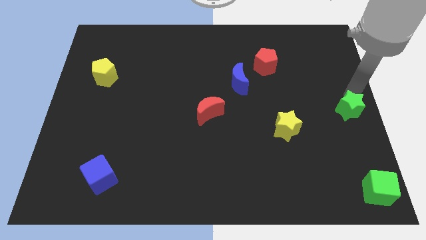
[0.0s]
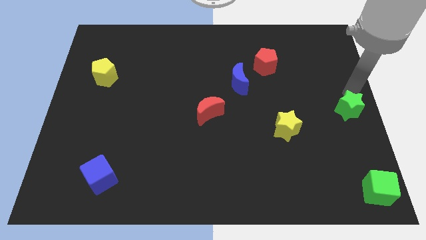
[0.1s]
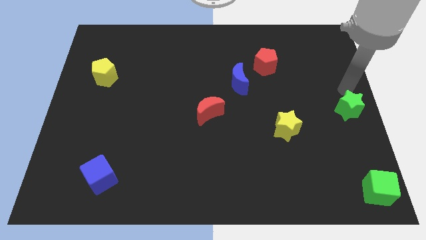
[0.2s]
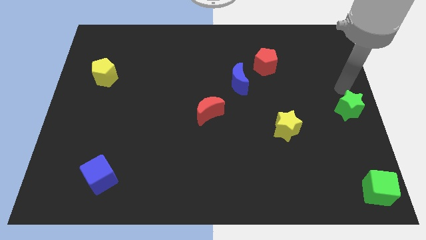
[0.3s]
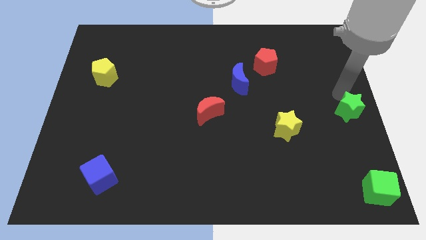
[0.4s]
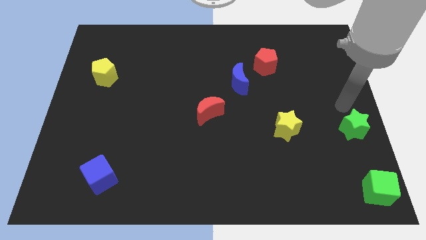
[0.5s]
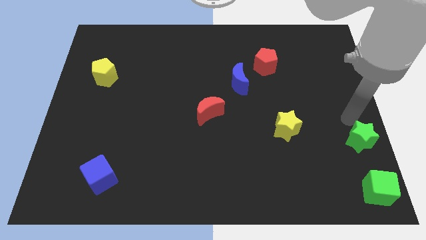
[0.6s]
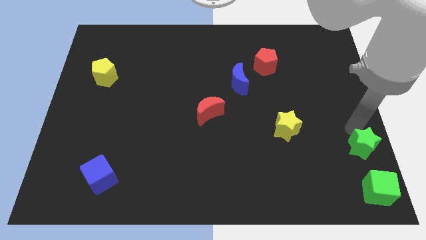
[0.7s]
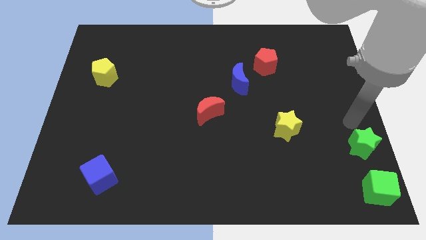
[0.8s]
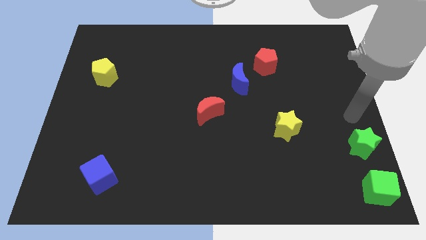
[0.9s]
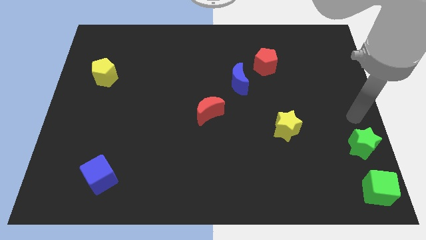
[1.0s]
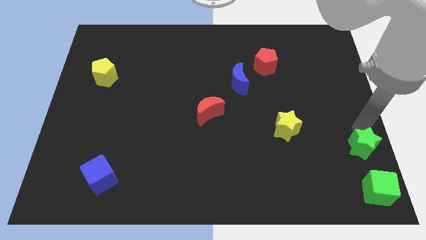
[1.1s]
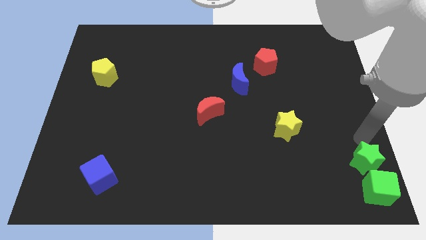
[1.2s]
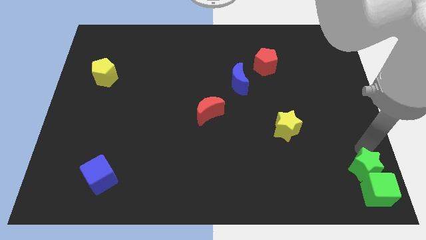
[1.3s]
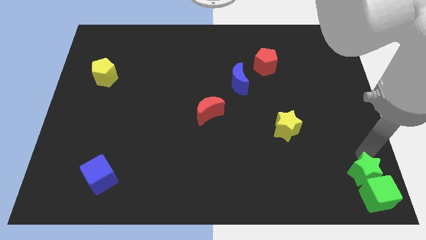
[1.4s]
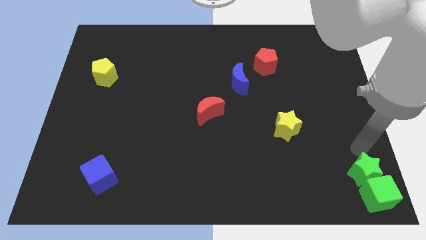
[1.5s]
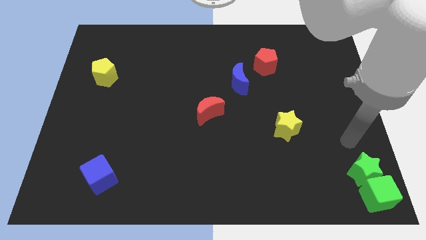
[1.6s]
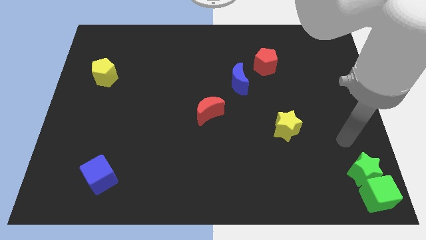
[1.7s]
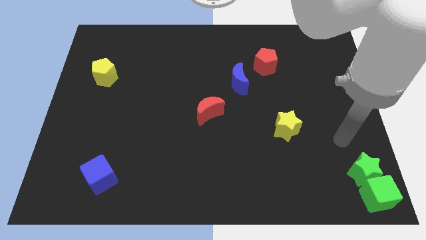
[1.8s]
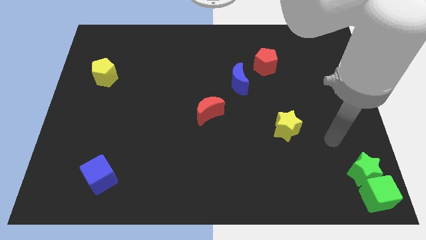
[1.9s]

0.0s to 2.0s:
place the green star on top of green cube

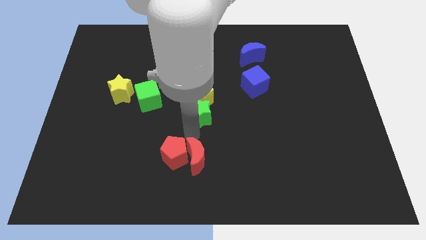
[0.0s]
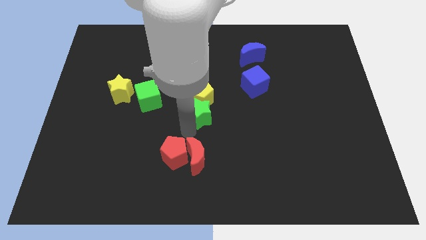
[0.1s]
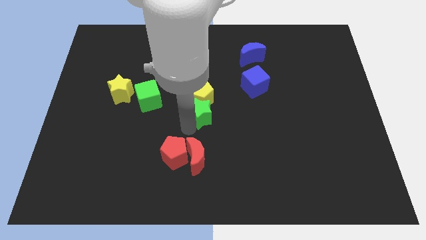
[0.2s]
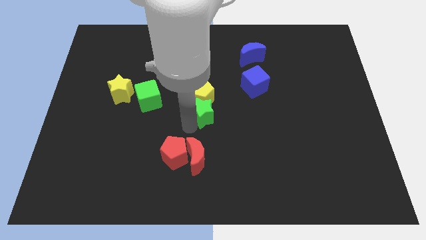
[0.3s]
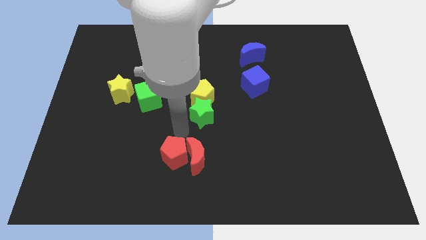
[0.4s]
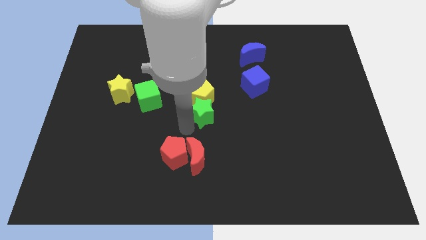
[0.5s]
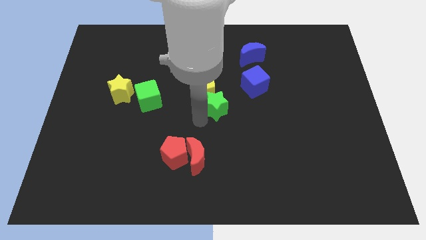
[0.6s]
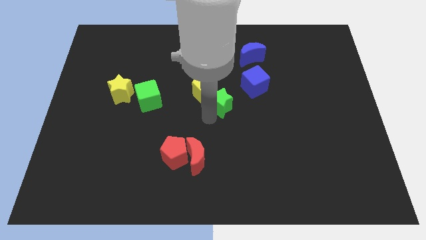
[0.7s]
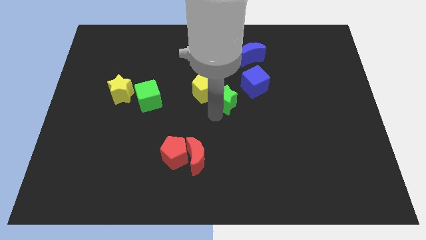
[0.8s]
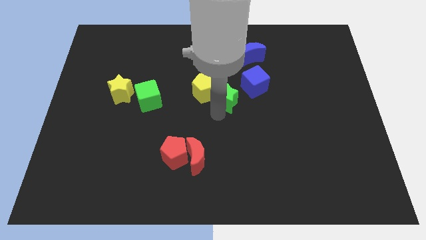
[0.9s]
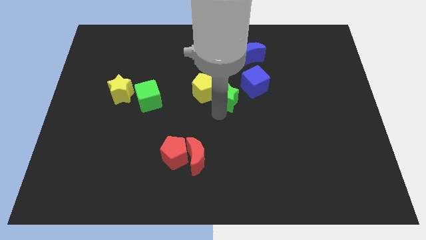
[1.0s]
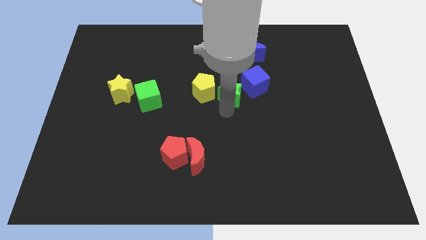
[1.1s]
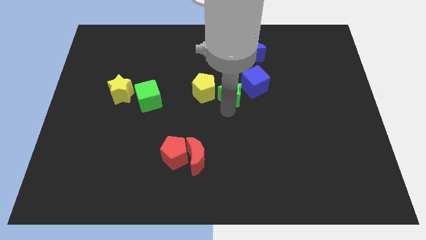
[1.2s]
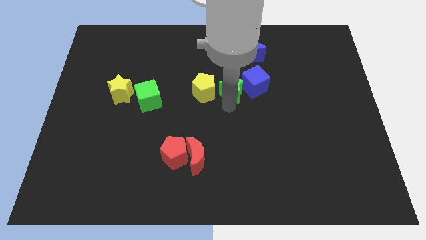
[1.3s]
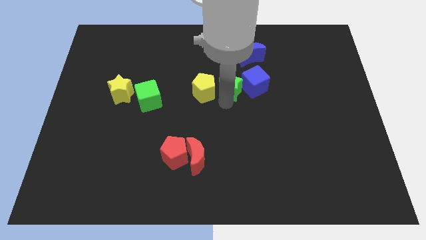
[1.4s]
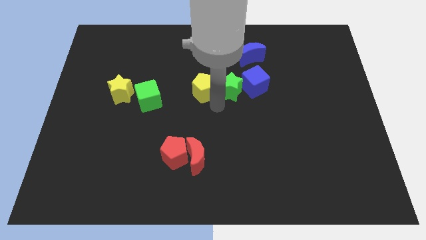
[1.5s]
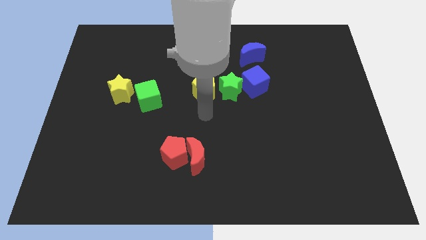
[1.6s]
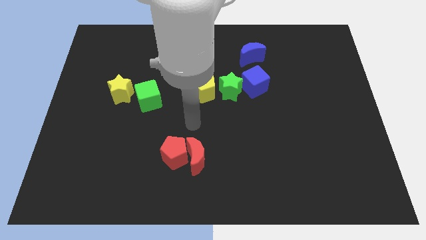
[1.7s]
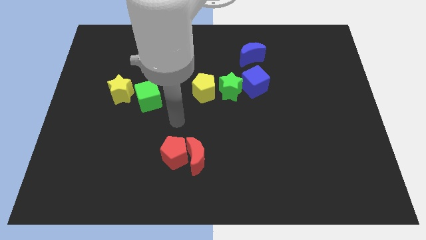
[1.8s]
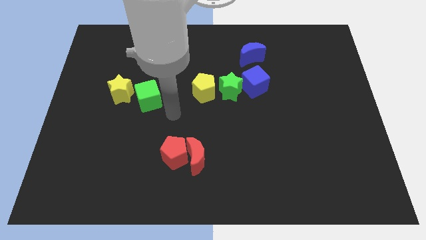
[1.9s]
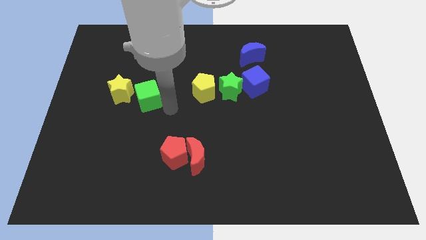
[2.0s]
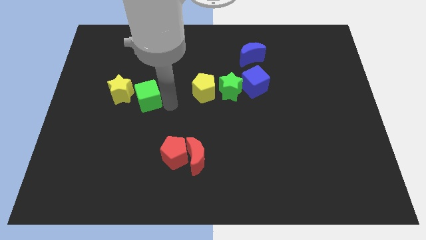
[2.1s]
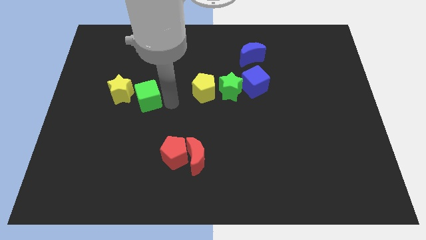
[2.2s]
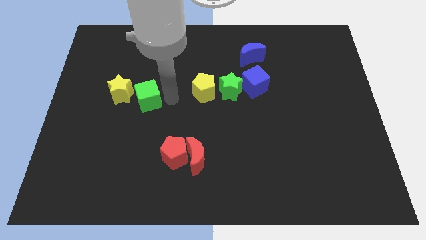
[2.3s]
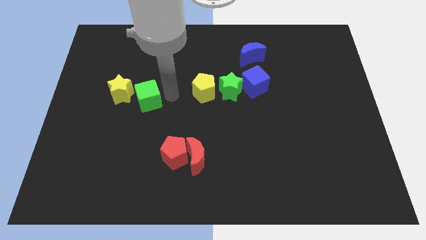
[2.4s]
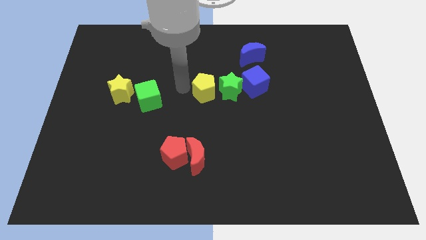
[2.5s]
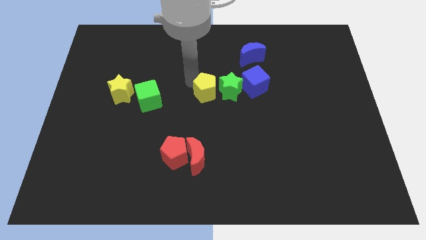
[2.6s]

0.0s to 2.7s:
place the green star and yellow pentagon in between the cubes

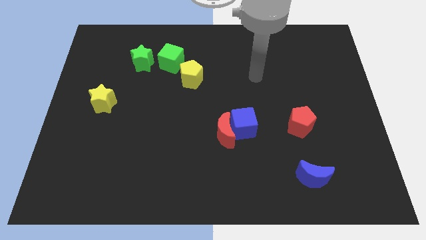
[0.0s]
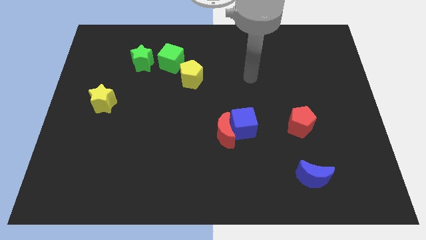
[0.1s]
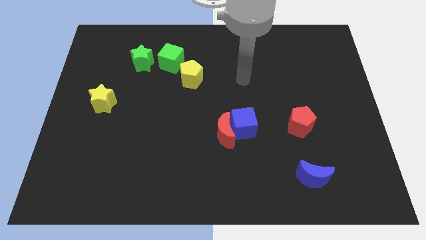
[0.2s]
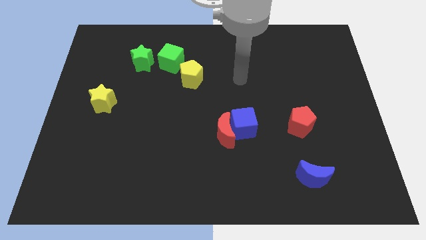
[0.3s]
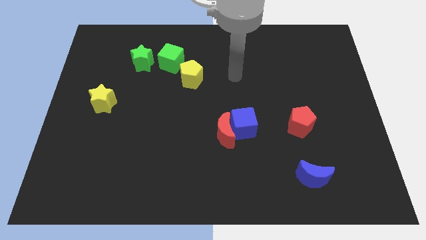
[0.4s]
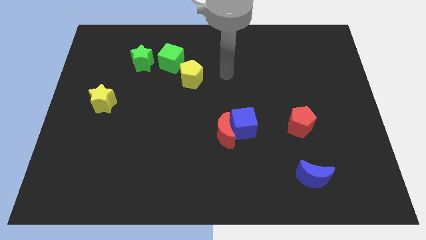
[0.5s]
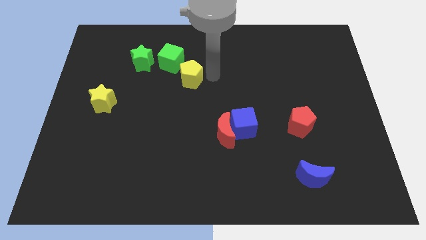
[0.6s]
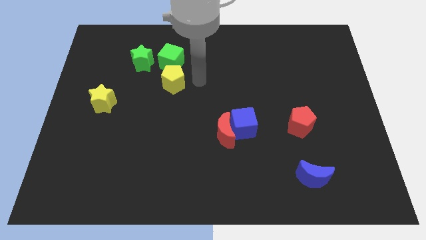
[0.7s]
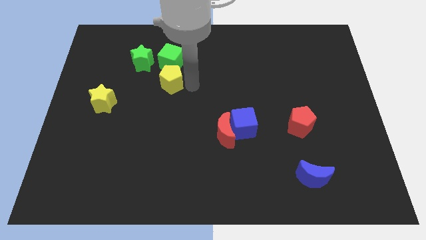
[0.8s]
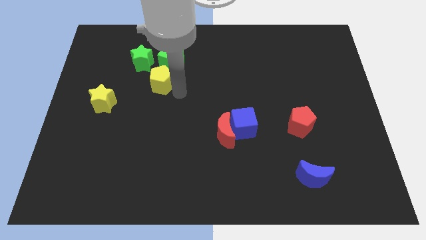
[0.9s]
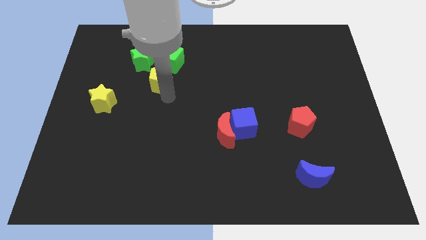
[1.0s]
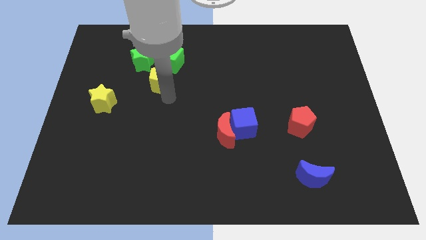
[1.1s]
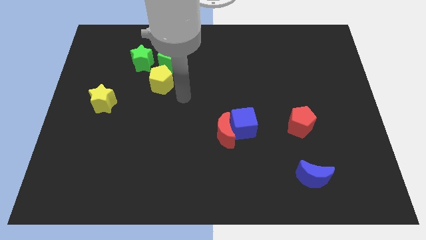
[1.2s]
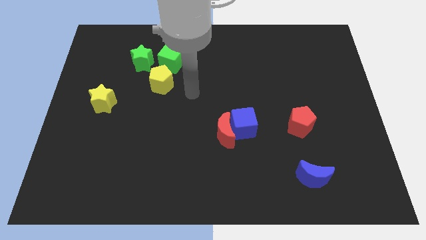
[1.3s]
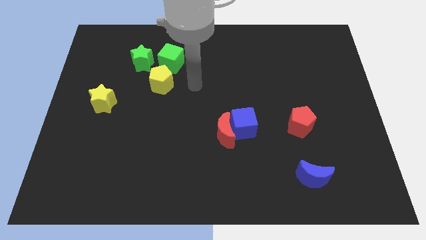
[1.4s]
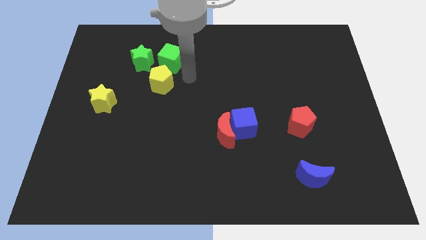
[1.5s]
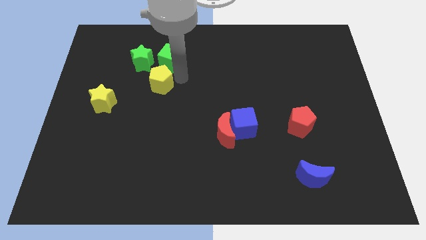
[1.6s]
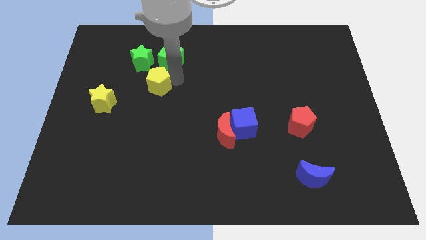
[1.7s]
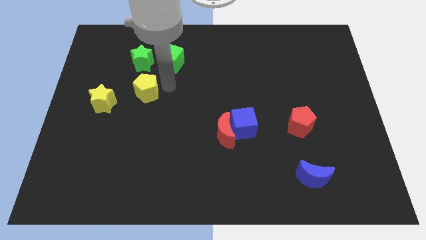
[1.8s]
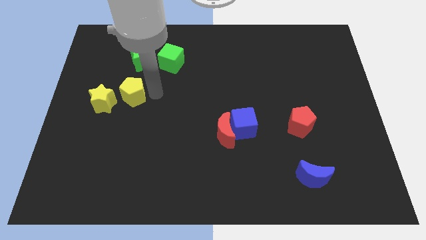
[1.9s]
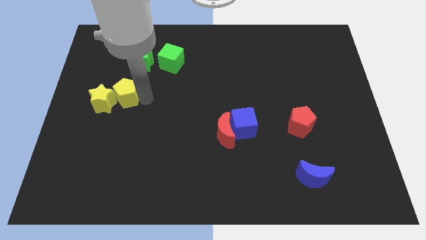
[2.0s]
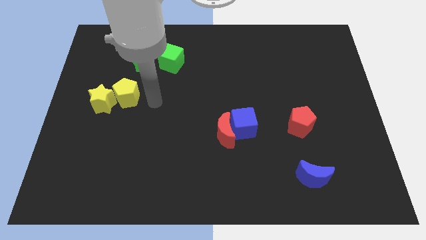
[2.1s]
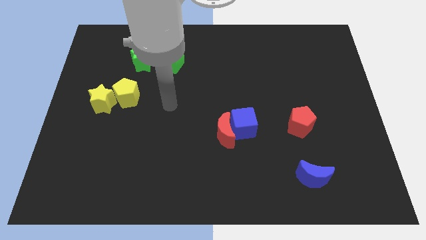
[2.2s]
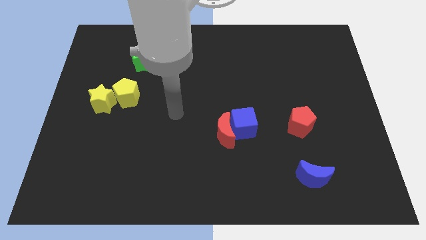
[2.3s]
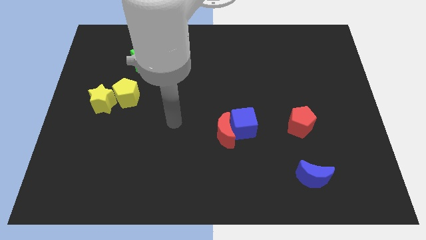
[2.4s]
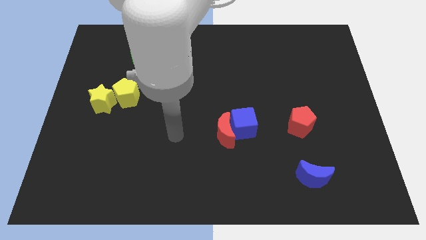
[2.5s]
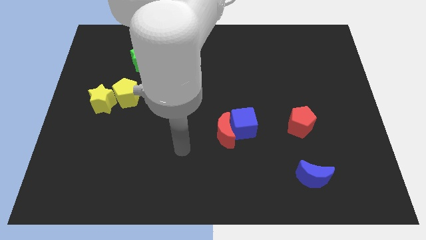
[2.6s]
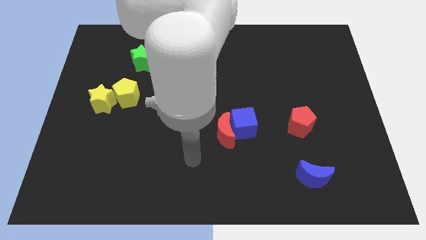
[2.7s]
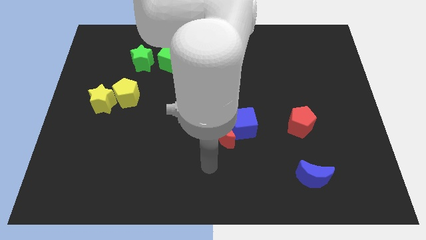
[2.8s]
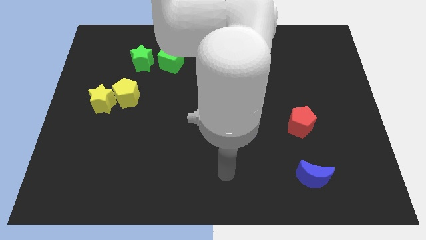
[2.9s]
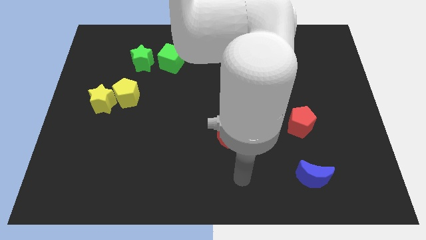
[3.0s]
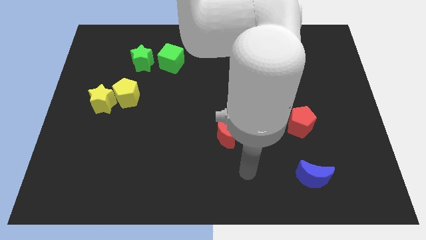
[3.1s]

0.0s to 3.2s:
push the yellow pentagon into the yellow star

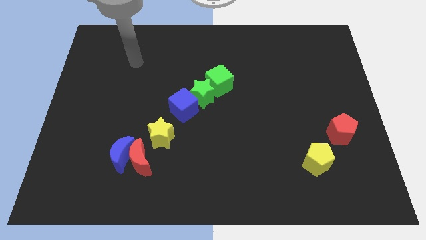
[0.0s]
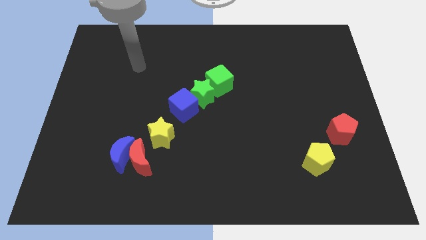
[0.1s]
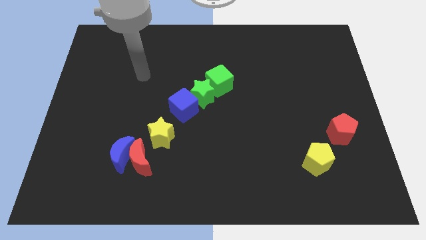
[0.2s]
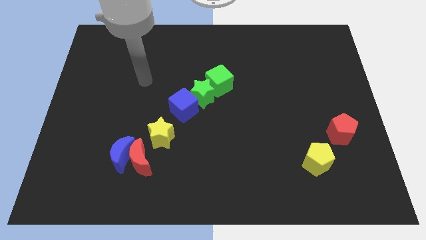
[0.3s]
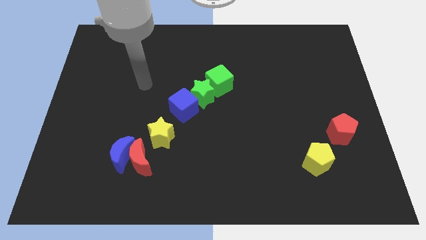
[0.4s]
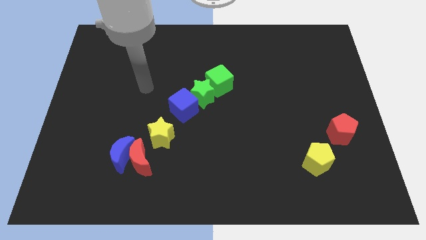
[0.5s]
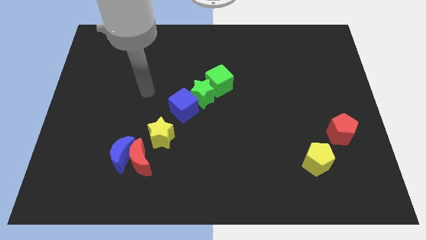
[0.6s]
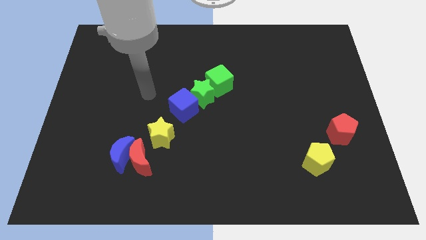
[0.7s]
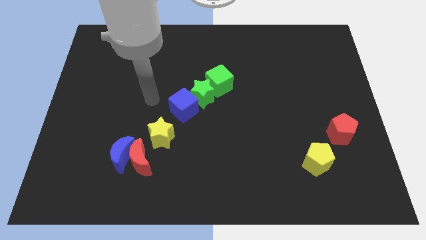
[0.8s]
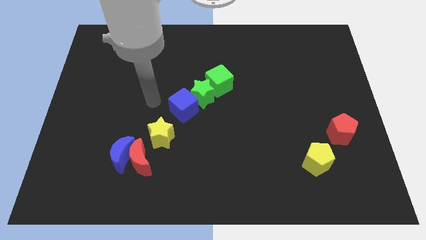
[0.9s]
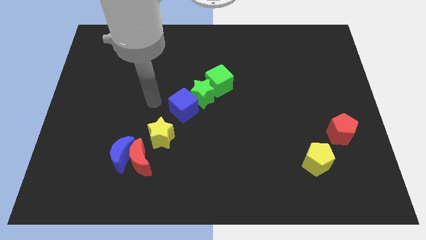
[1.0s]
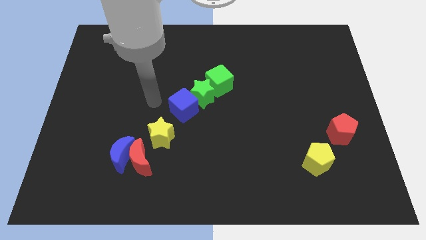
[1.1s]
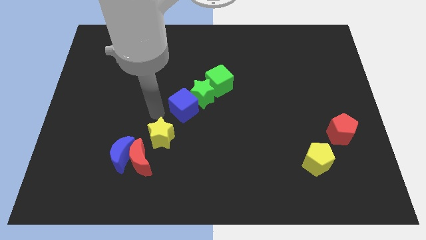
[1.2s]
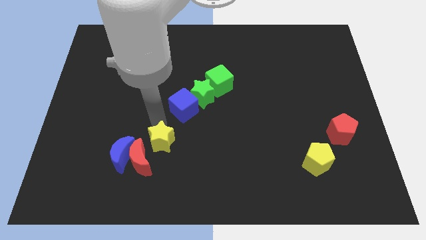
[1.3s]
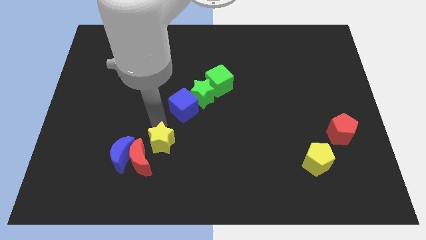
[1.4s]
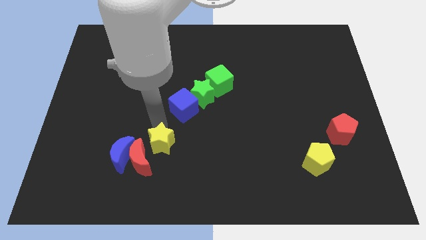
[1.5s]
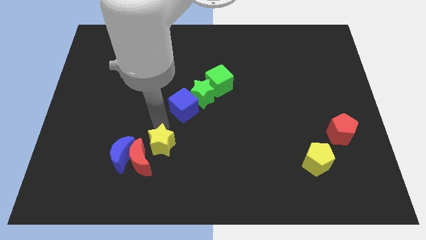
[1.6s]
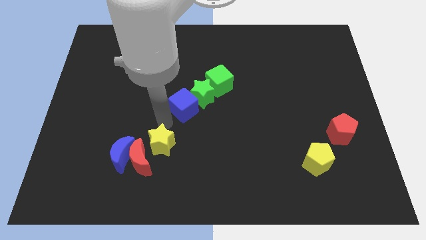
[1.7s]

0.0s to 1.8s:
move your arm towards the yellow star
